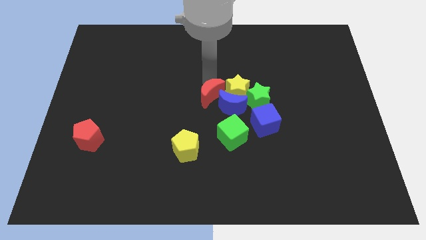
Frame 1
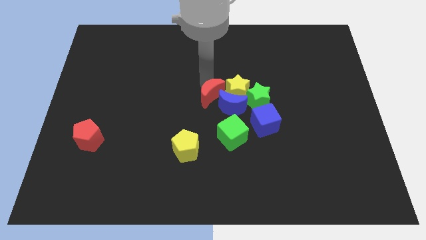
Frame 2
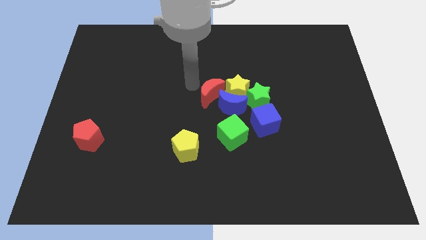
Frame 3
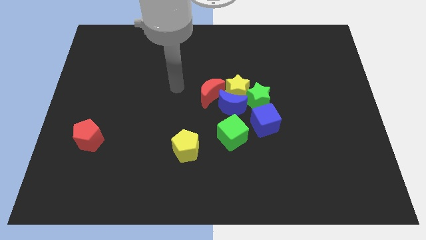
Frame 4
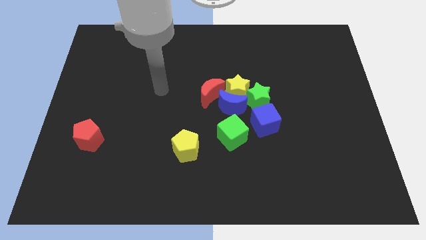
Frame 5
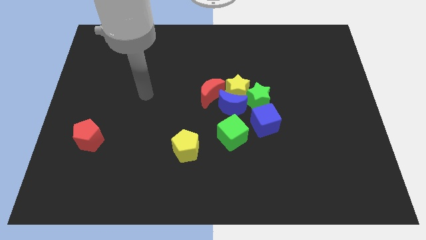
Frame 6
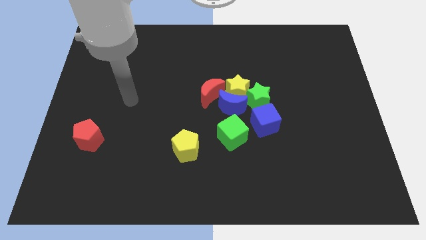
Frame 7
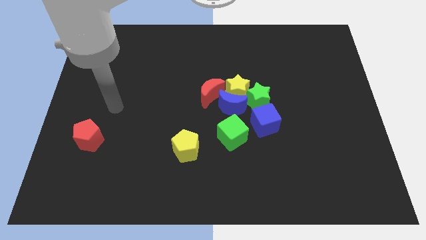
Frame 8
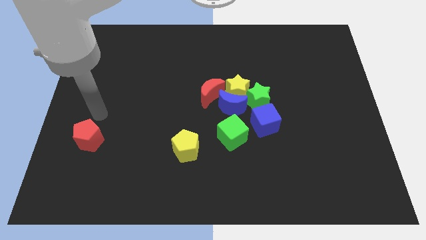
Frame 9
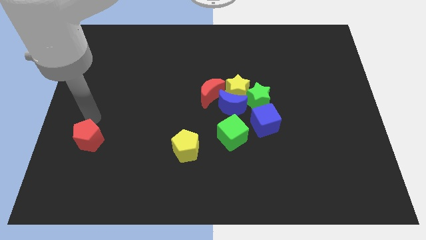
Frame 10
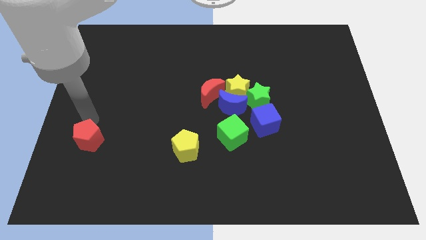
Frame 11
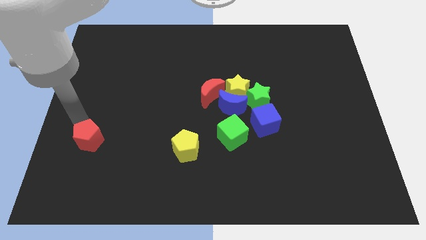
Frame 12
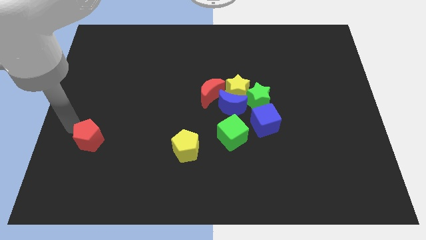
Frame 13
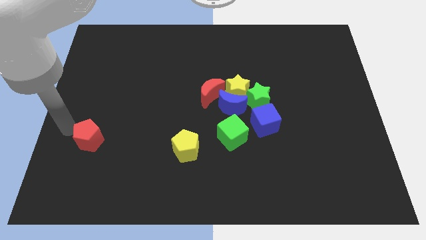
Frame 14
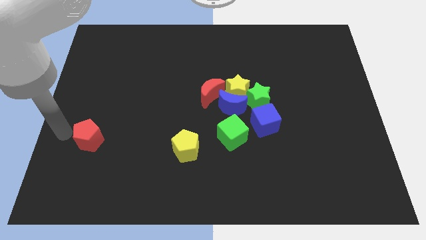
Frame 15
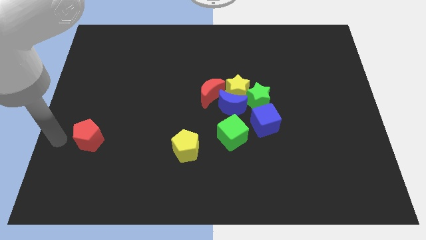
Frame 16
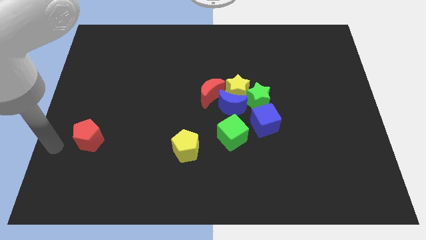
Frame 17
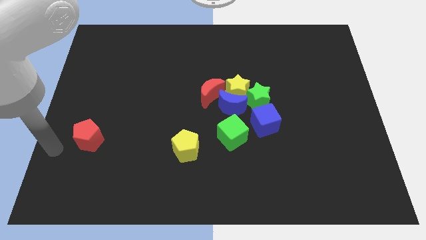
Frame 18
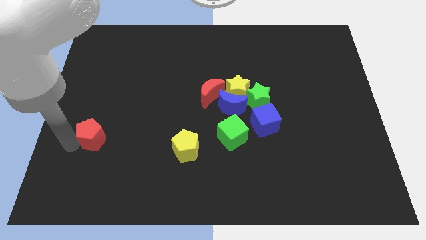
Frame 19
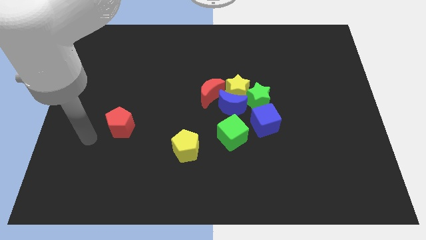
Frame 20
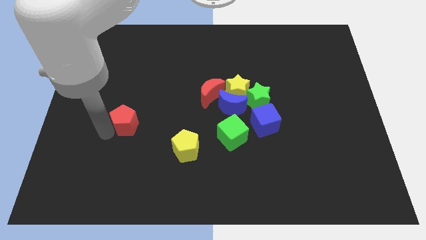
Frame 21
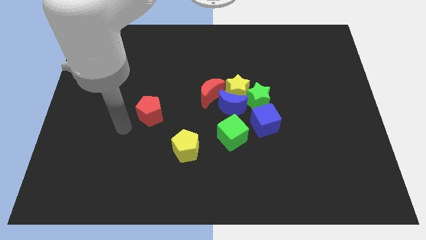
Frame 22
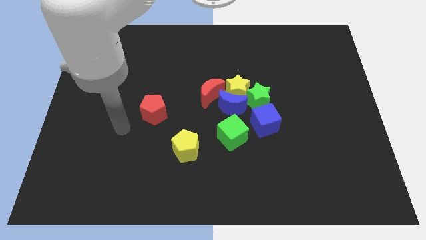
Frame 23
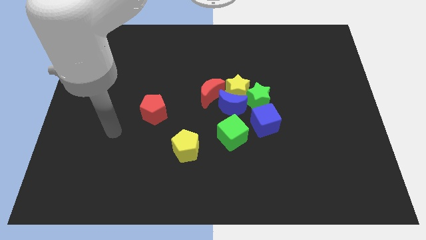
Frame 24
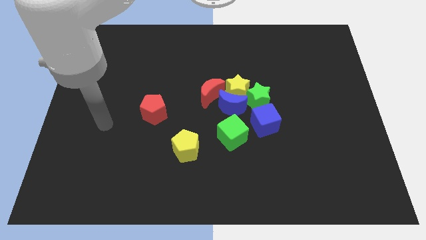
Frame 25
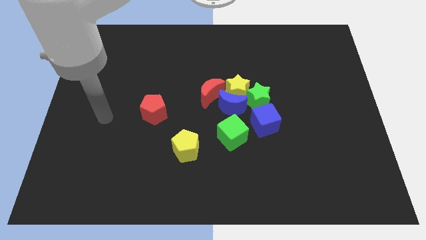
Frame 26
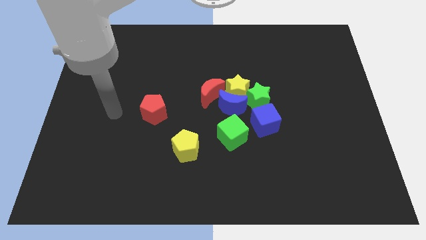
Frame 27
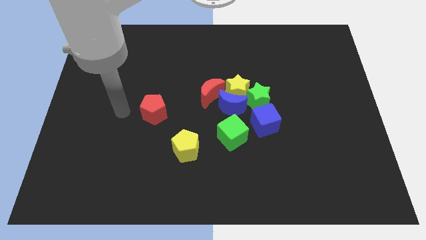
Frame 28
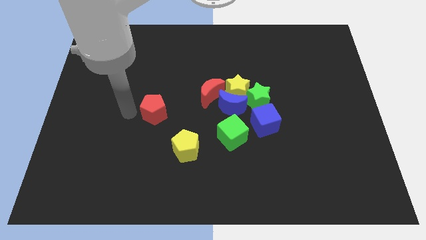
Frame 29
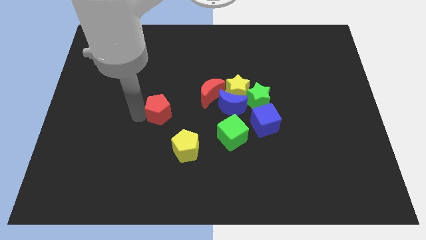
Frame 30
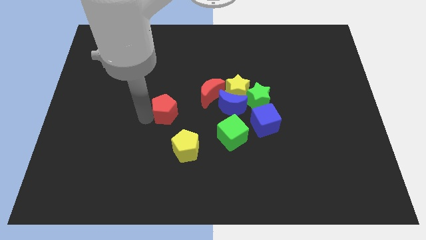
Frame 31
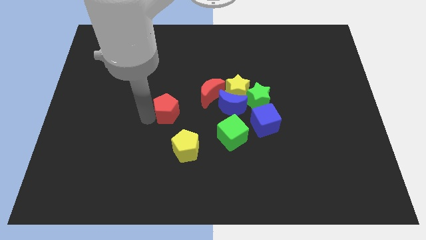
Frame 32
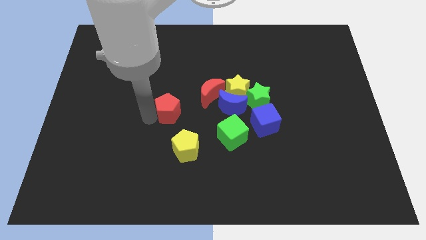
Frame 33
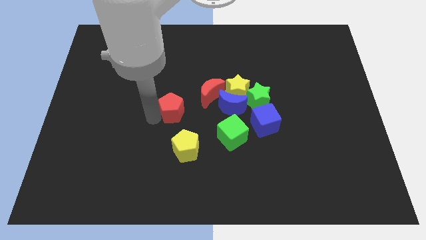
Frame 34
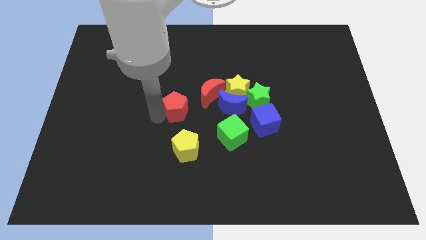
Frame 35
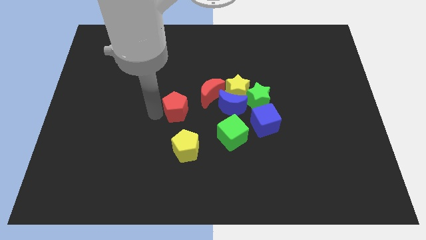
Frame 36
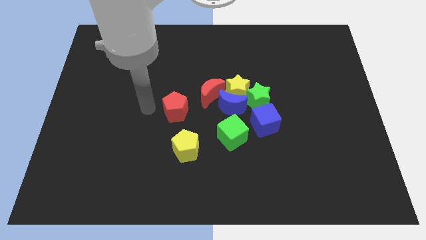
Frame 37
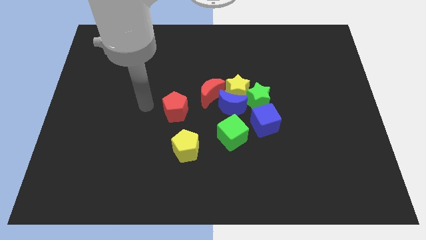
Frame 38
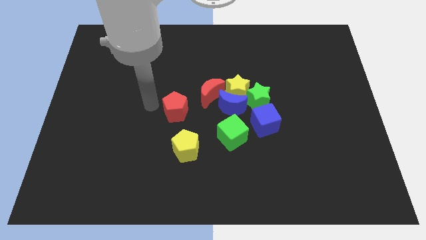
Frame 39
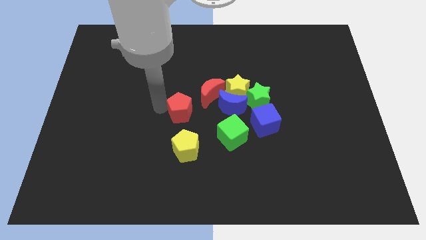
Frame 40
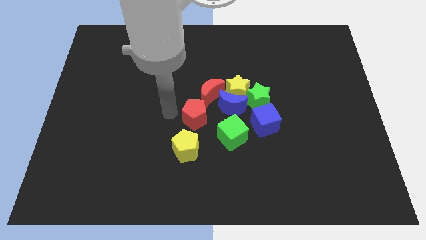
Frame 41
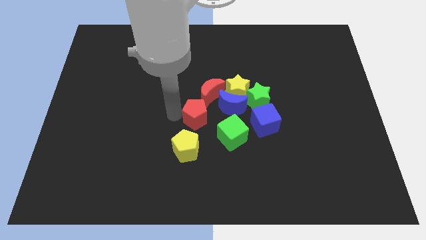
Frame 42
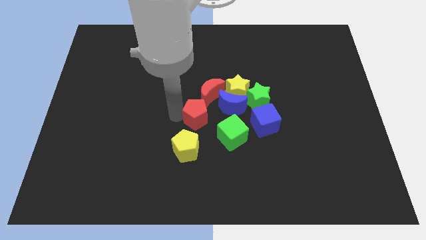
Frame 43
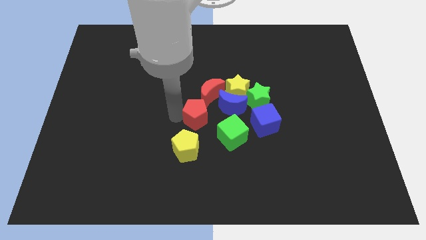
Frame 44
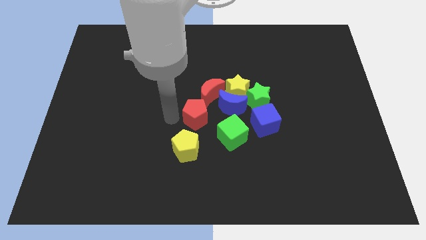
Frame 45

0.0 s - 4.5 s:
move red pentagon towards the red crescent

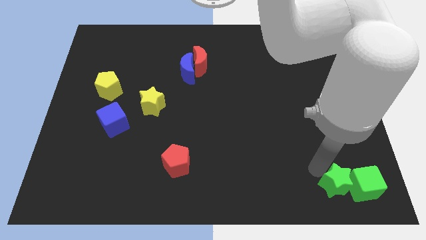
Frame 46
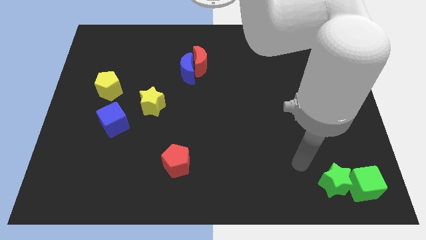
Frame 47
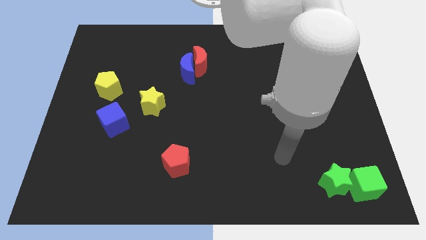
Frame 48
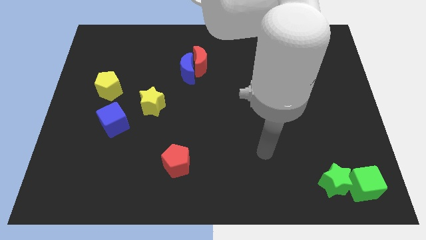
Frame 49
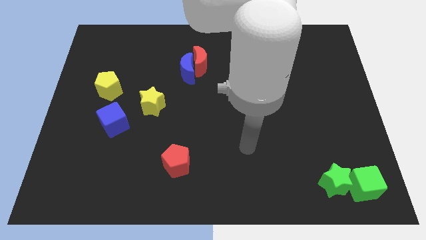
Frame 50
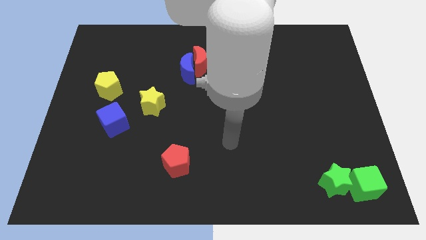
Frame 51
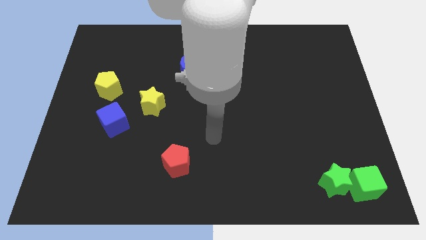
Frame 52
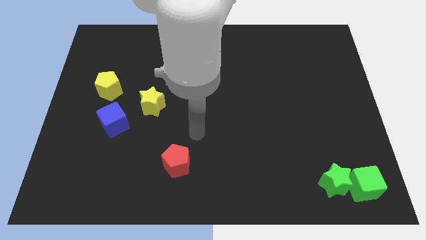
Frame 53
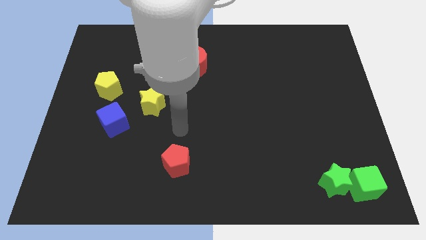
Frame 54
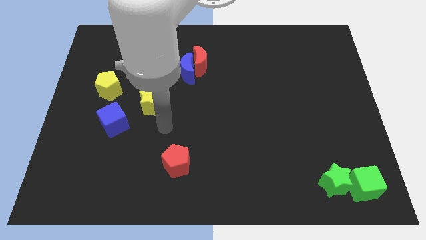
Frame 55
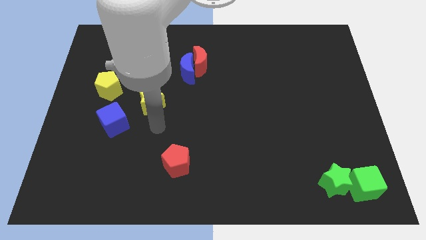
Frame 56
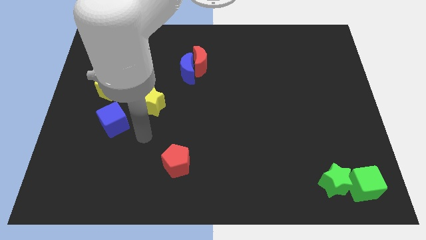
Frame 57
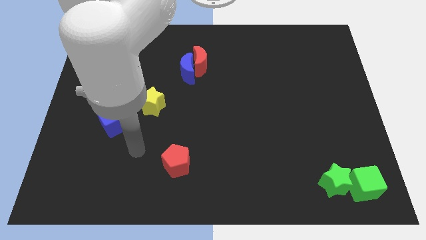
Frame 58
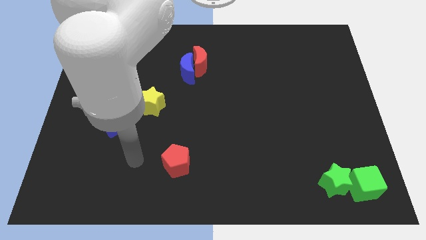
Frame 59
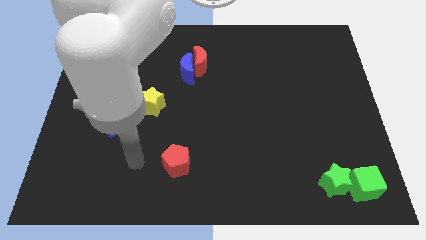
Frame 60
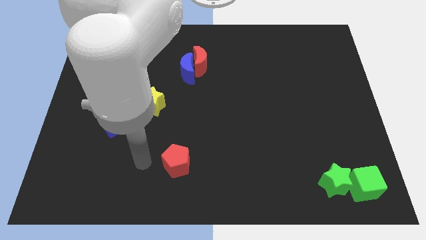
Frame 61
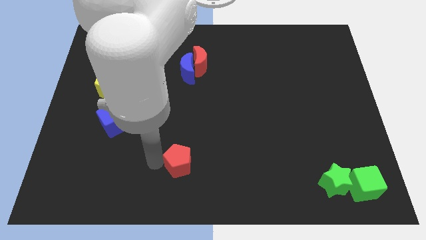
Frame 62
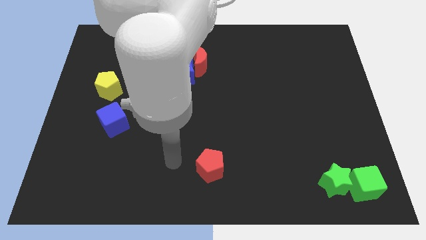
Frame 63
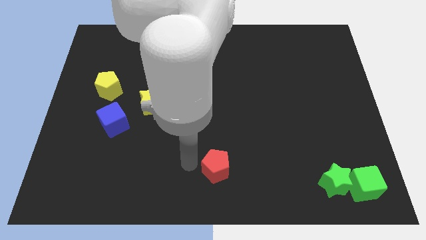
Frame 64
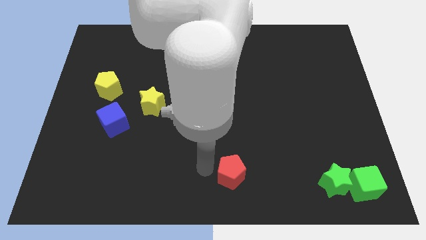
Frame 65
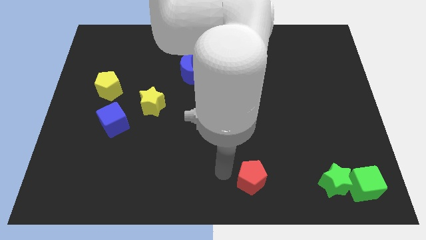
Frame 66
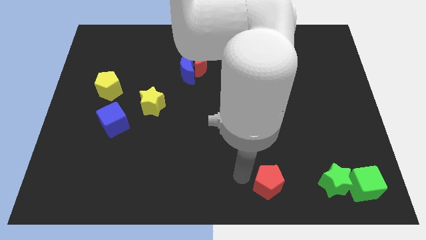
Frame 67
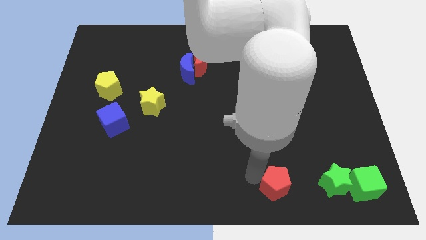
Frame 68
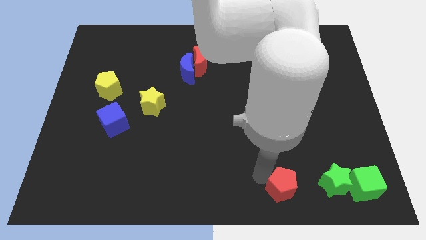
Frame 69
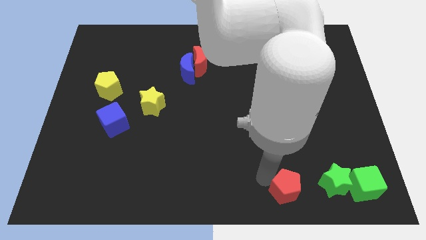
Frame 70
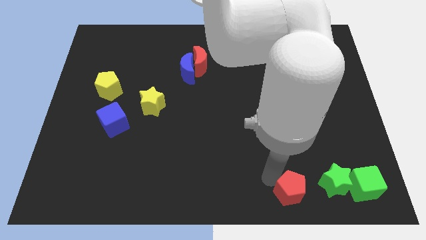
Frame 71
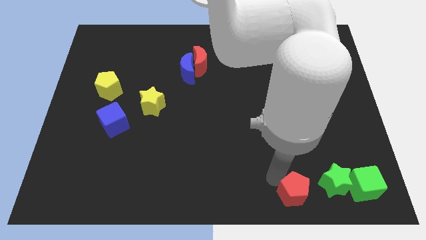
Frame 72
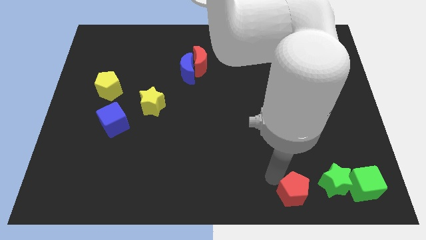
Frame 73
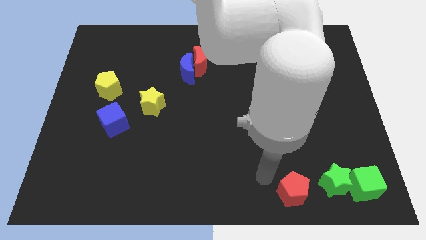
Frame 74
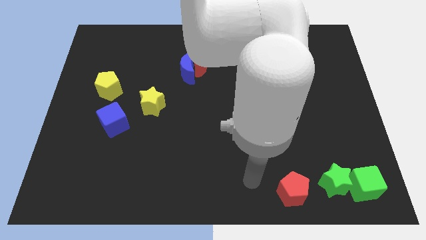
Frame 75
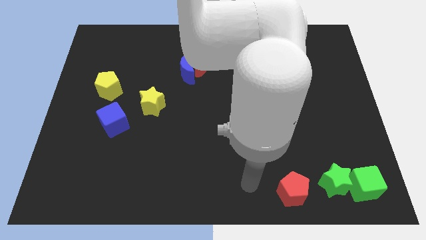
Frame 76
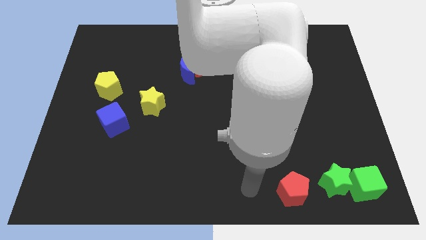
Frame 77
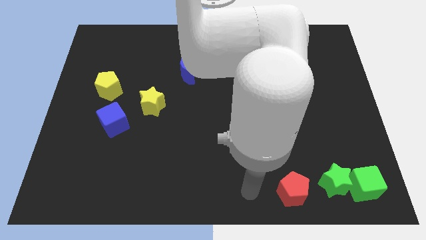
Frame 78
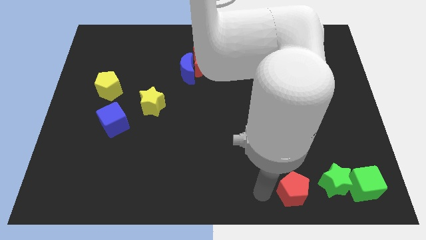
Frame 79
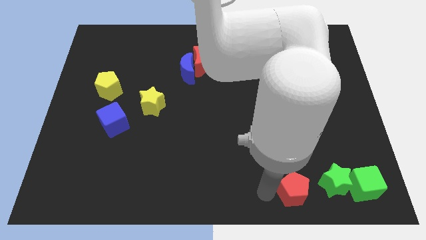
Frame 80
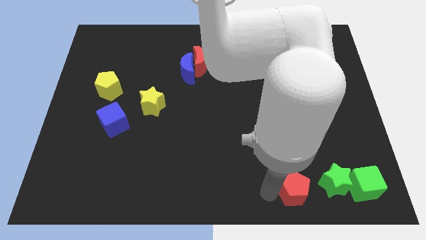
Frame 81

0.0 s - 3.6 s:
push the red pentagon towards the green star

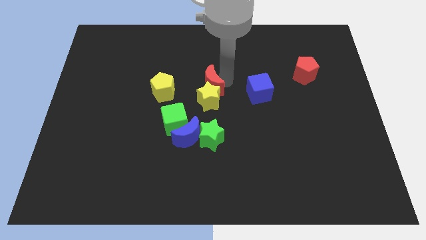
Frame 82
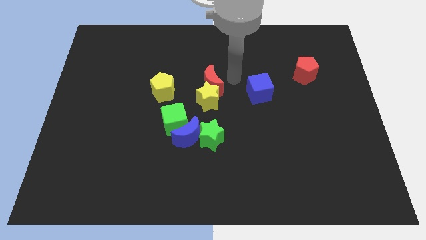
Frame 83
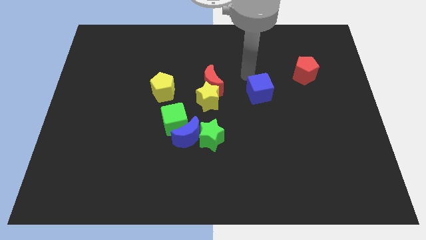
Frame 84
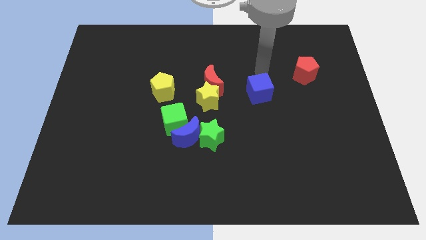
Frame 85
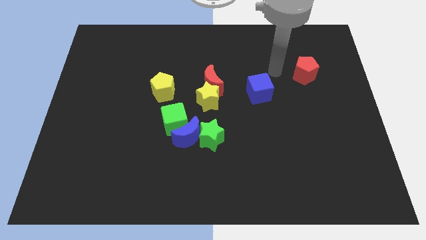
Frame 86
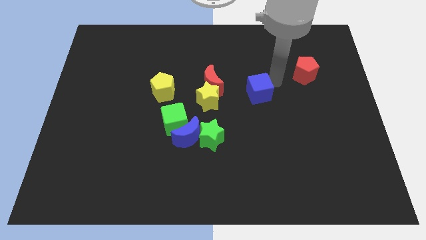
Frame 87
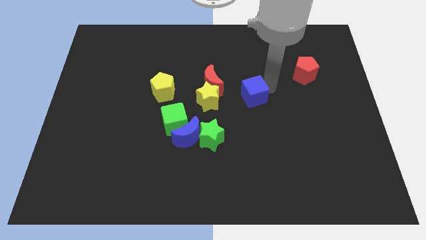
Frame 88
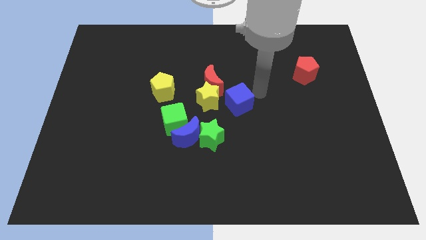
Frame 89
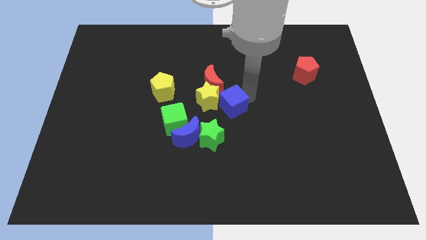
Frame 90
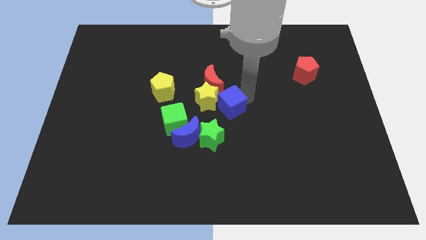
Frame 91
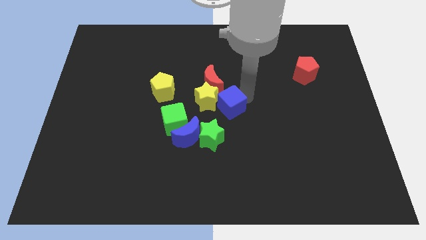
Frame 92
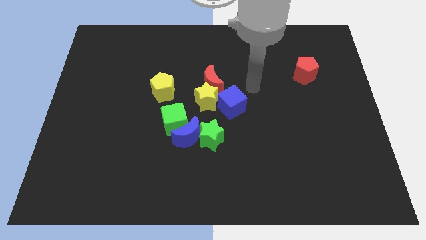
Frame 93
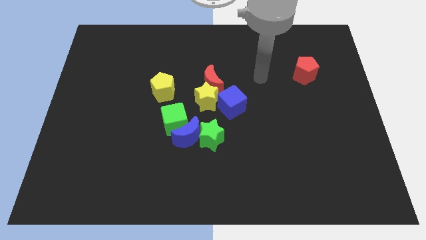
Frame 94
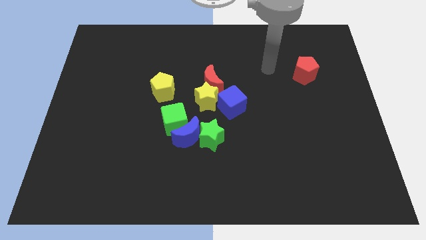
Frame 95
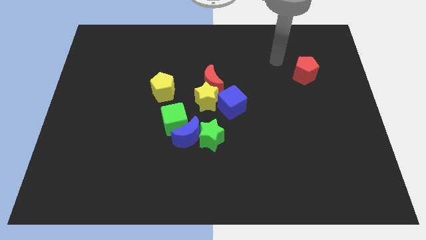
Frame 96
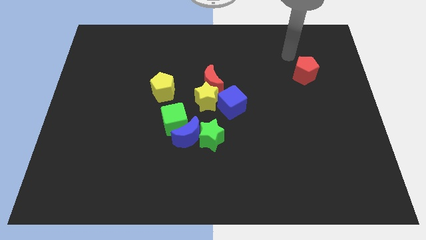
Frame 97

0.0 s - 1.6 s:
push the blue cube to the right of the yellow star
